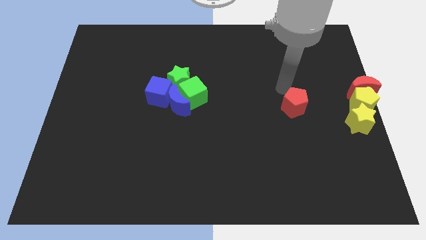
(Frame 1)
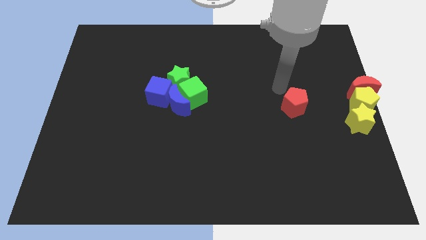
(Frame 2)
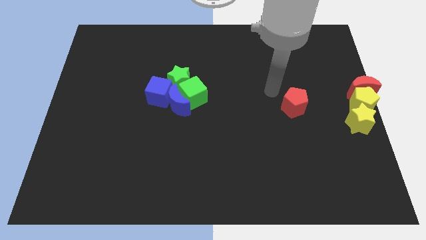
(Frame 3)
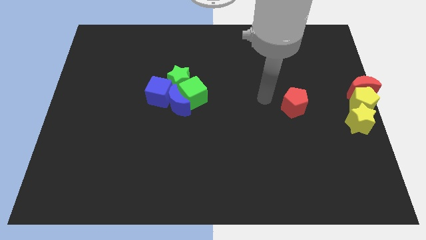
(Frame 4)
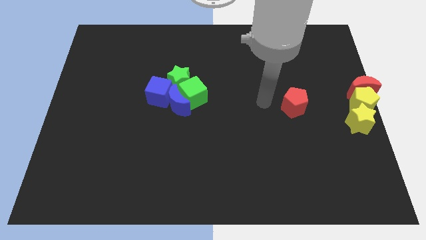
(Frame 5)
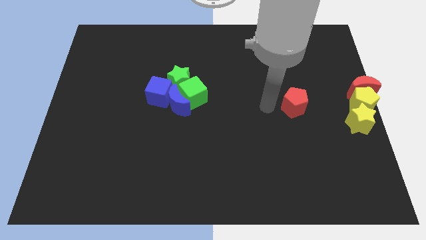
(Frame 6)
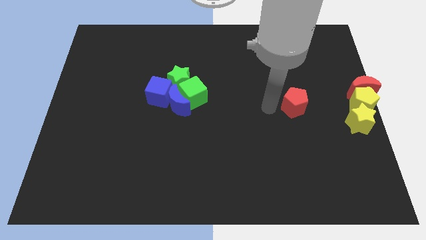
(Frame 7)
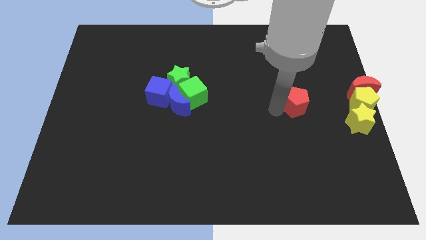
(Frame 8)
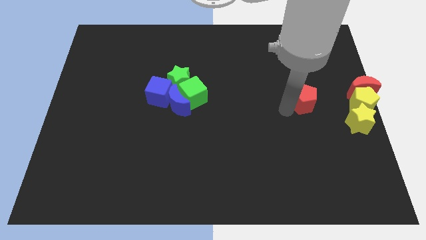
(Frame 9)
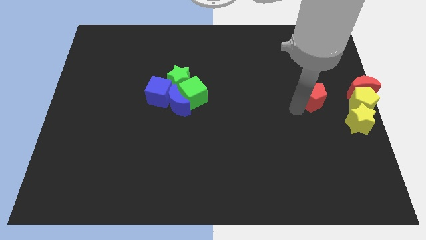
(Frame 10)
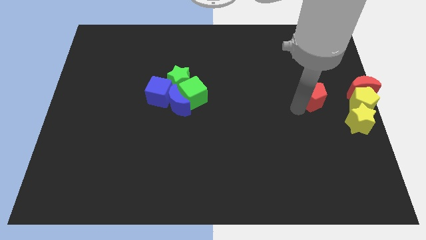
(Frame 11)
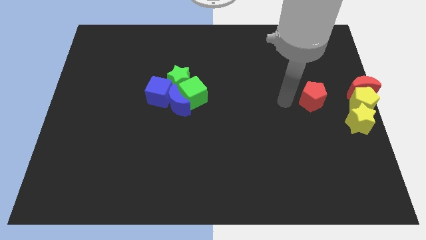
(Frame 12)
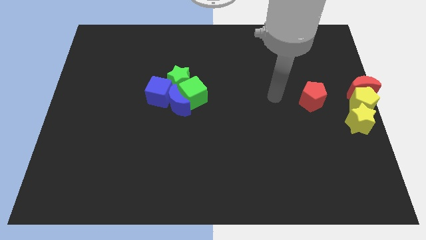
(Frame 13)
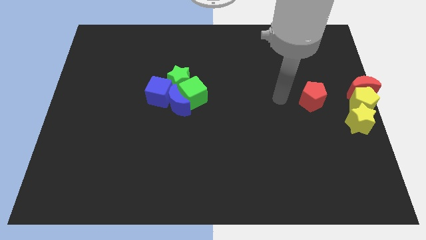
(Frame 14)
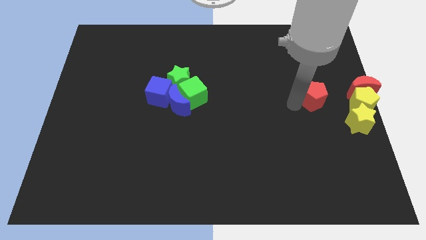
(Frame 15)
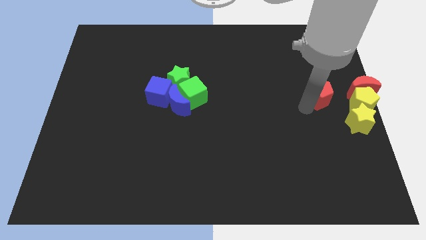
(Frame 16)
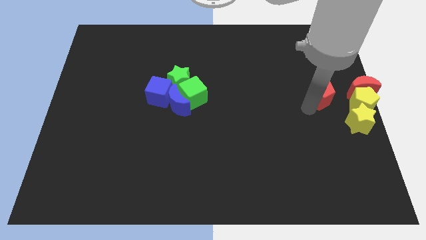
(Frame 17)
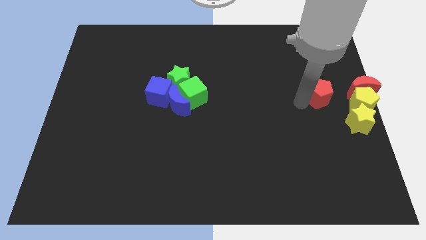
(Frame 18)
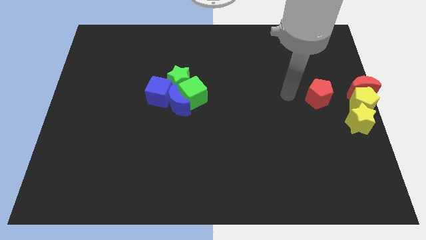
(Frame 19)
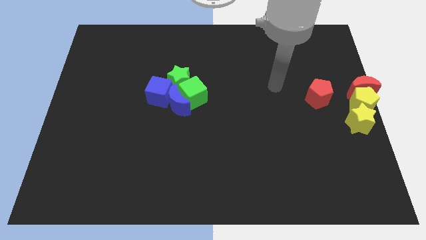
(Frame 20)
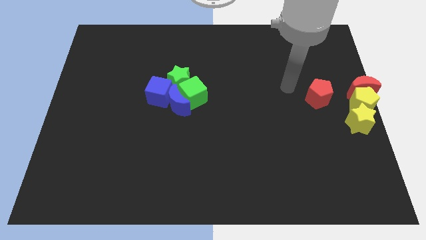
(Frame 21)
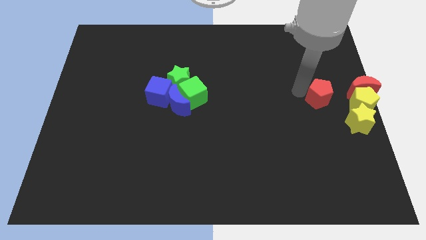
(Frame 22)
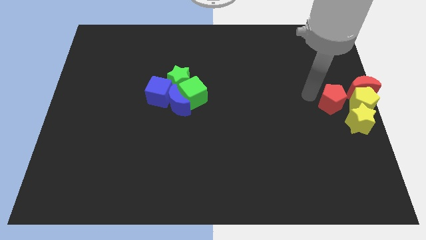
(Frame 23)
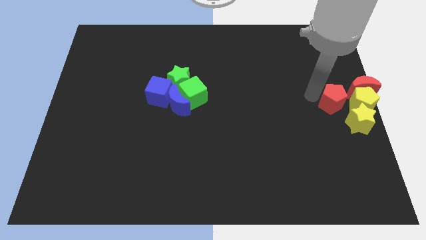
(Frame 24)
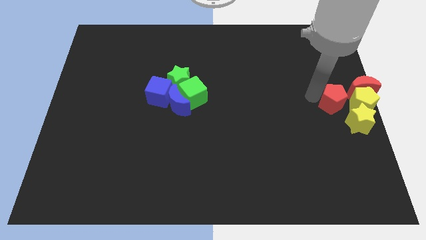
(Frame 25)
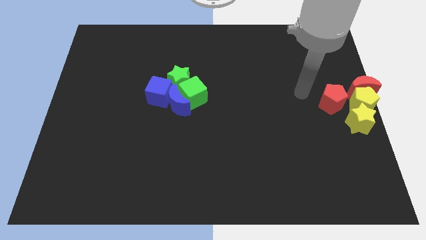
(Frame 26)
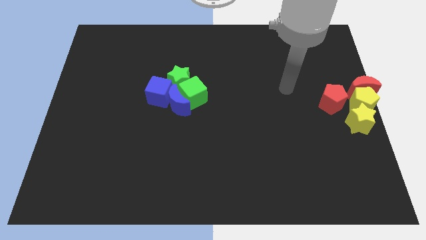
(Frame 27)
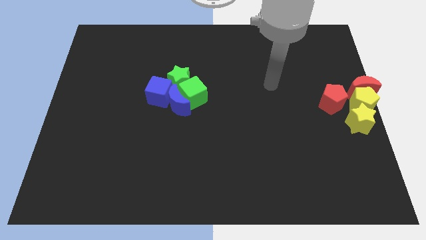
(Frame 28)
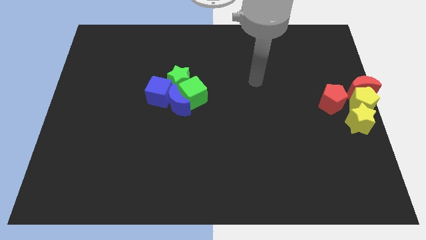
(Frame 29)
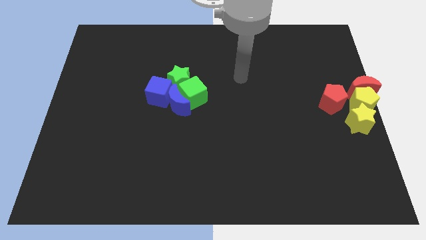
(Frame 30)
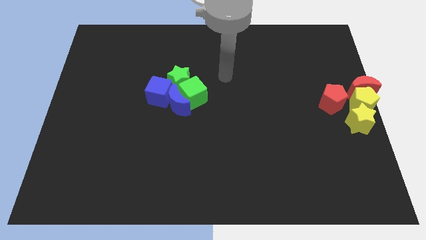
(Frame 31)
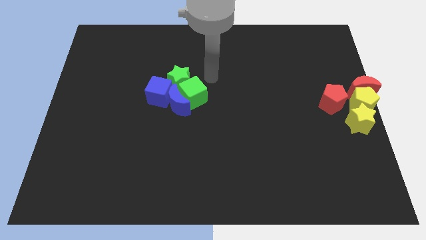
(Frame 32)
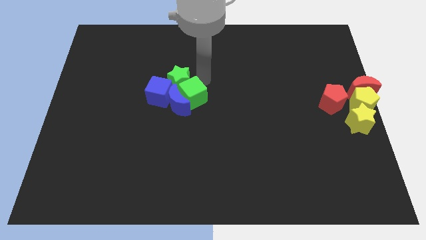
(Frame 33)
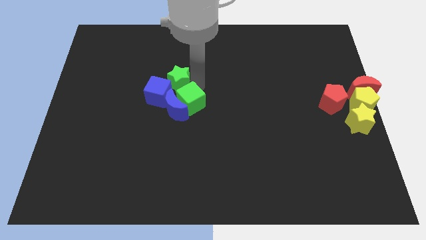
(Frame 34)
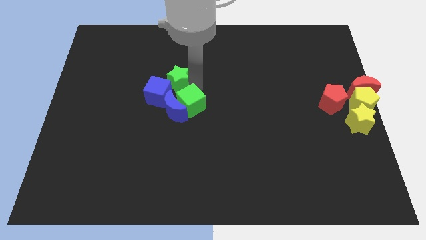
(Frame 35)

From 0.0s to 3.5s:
push the red pentagon close to the yellow pentagon

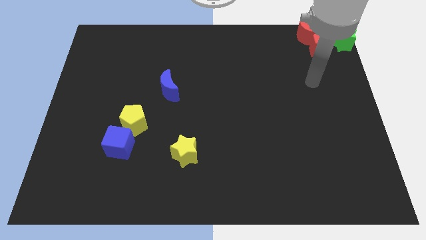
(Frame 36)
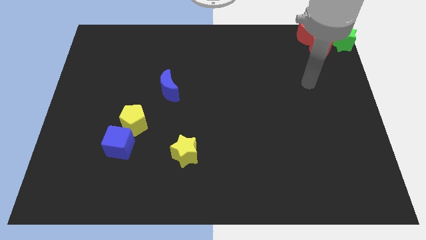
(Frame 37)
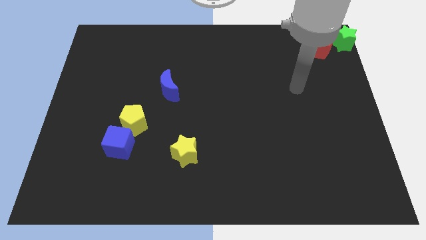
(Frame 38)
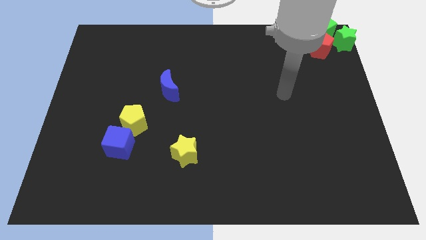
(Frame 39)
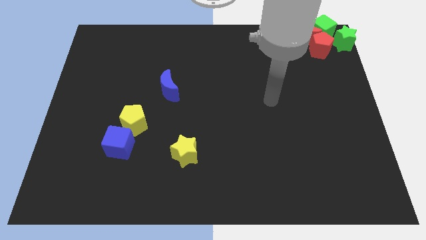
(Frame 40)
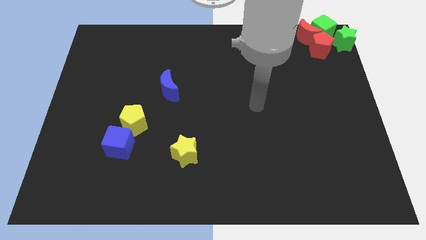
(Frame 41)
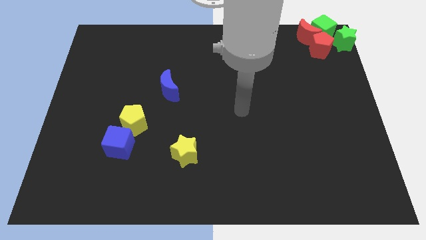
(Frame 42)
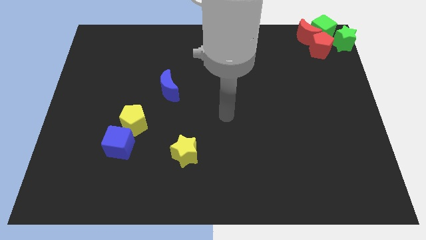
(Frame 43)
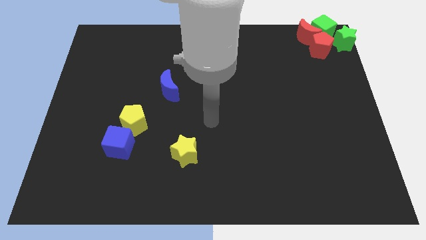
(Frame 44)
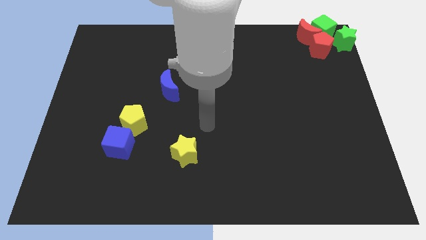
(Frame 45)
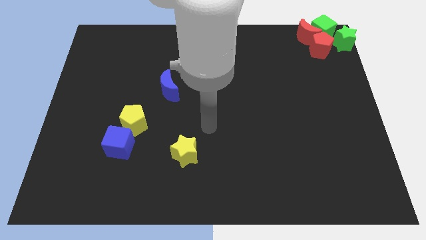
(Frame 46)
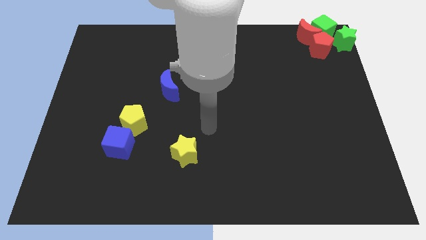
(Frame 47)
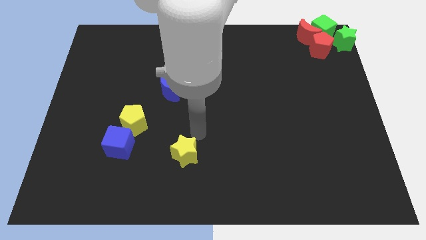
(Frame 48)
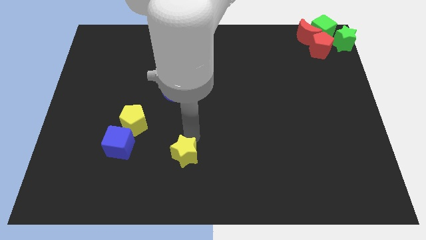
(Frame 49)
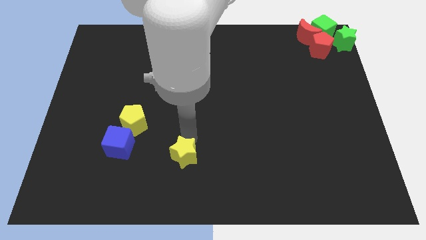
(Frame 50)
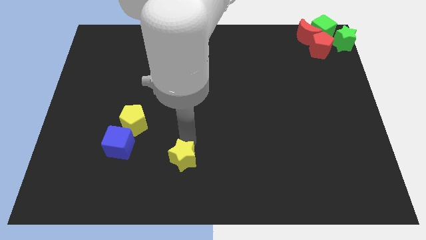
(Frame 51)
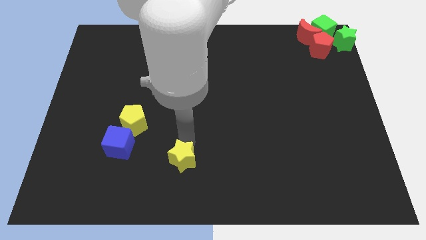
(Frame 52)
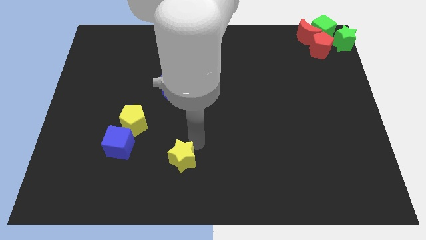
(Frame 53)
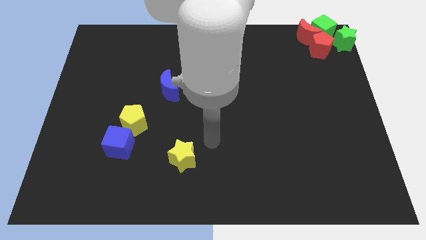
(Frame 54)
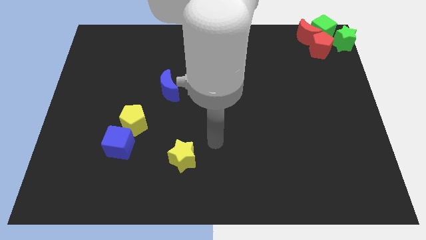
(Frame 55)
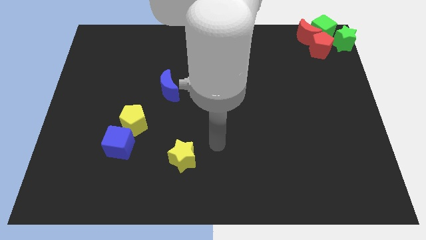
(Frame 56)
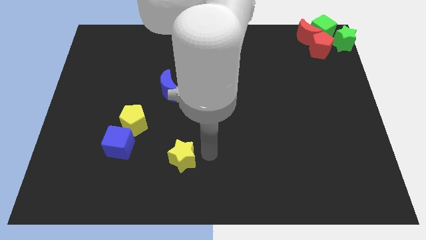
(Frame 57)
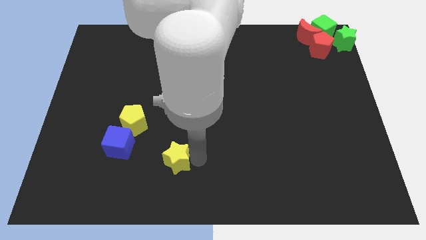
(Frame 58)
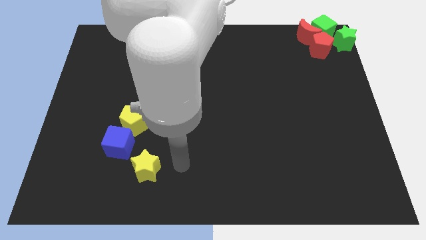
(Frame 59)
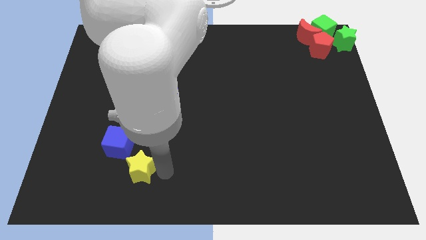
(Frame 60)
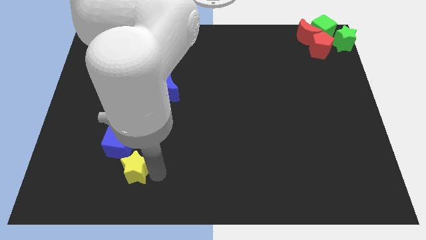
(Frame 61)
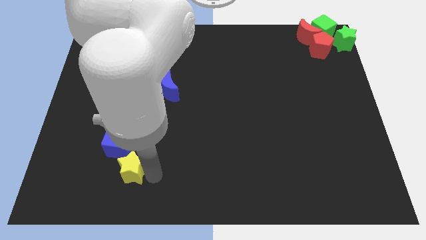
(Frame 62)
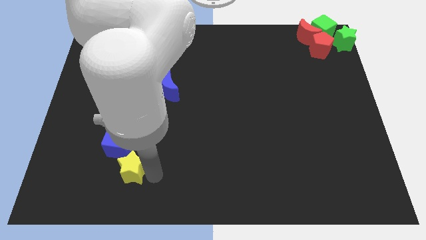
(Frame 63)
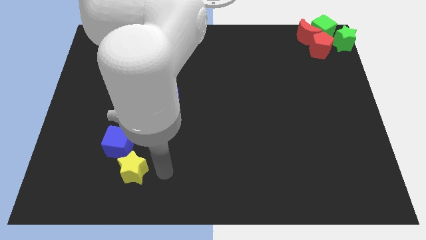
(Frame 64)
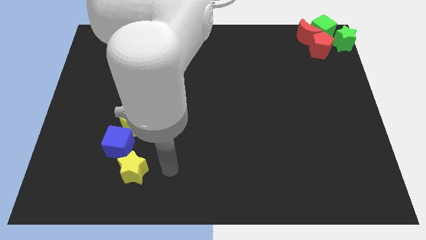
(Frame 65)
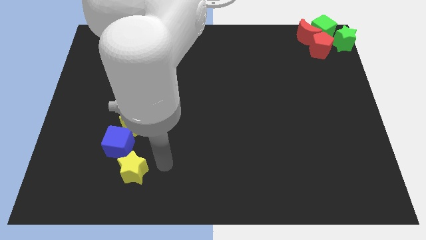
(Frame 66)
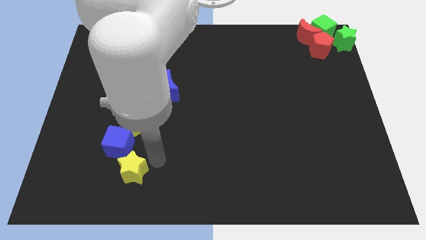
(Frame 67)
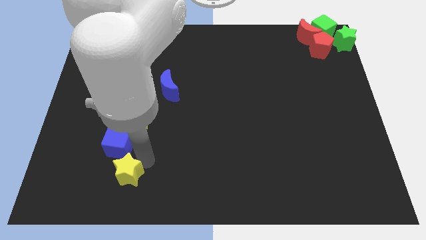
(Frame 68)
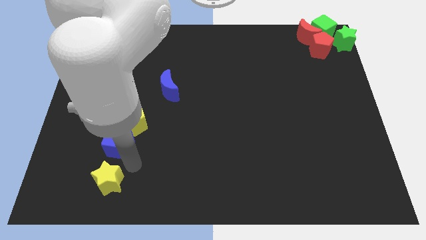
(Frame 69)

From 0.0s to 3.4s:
move the yellow star to the bottom of the blue cube

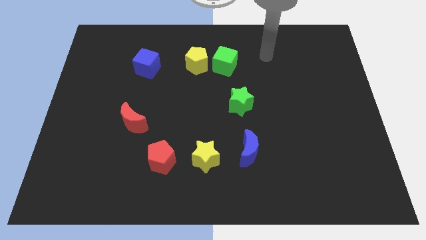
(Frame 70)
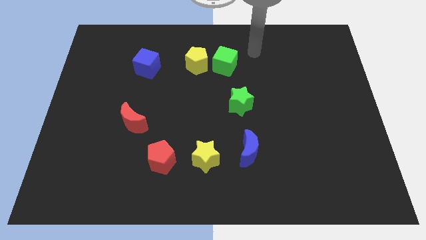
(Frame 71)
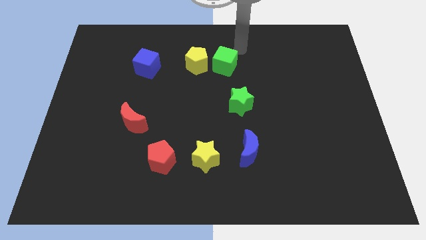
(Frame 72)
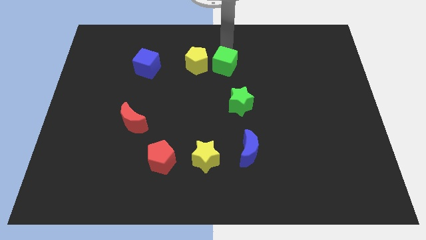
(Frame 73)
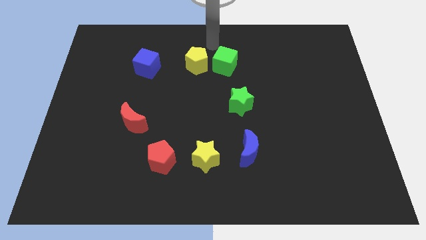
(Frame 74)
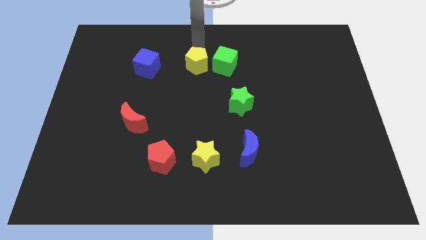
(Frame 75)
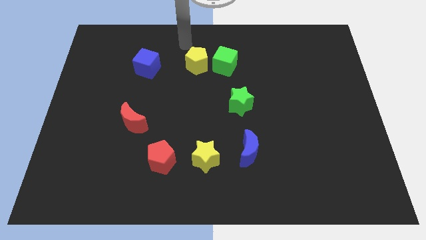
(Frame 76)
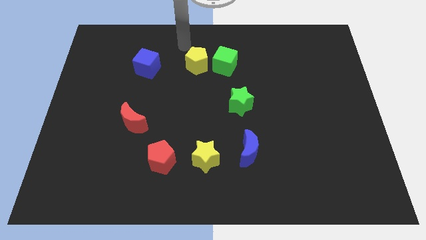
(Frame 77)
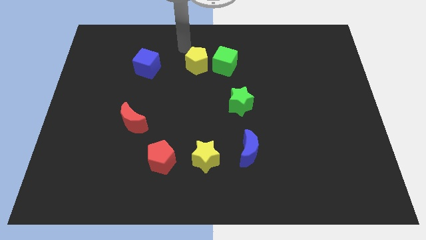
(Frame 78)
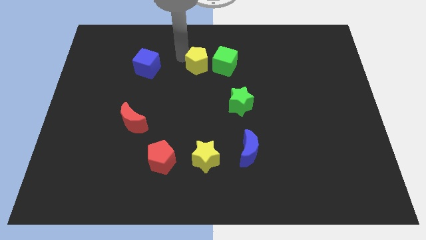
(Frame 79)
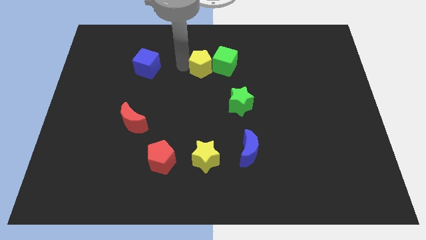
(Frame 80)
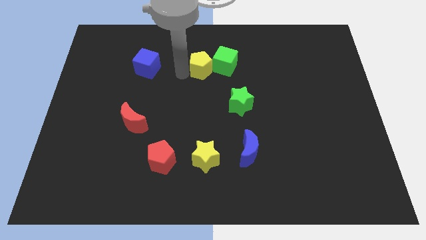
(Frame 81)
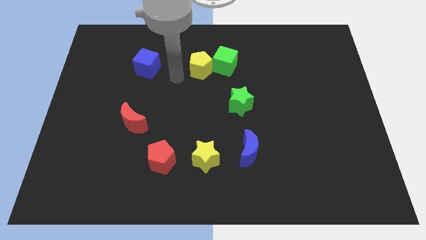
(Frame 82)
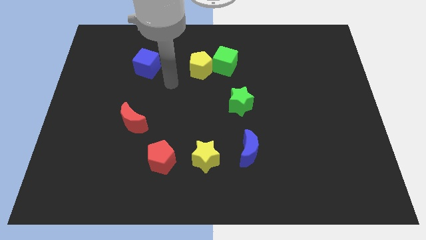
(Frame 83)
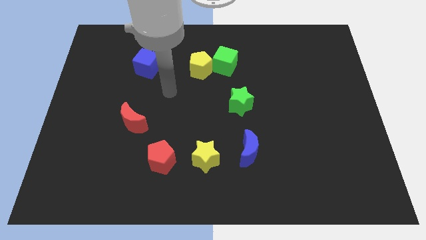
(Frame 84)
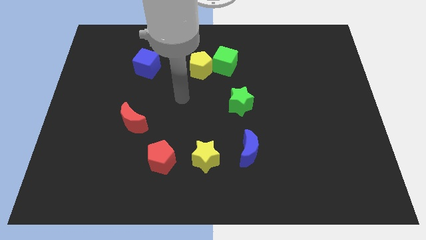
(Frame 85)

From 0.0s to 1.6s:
make green cube and yellow pentagon touch each other

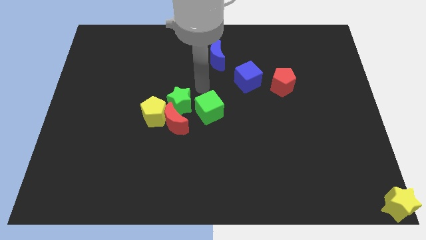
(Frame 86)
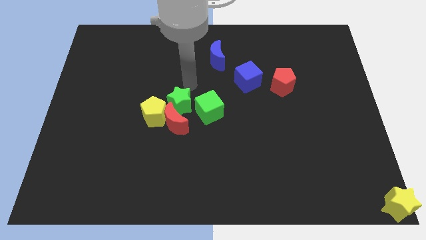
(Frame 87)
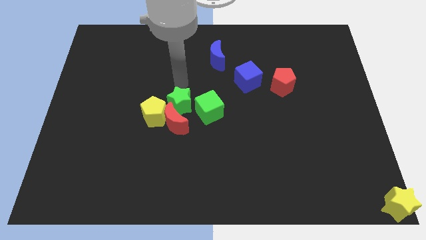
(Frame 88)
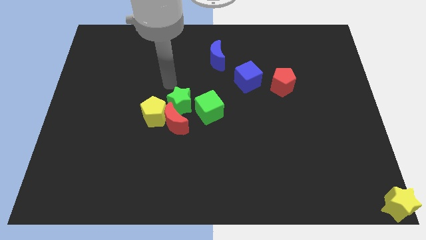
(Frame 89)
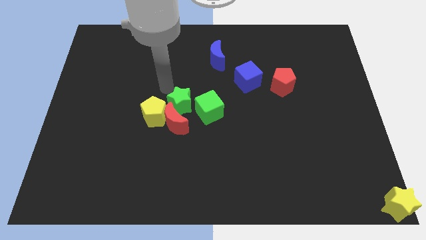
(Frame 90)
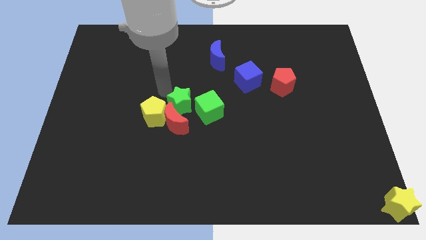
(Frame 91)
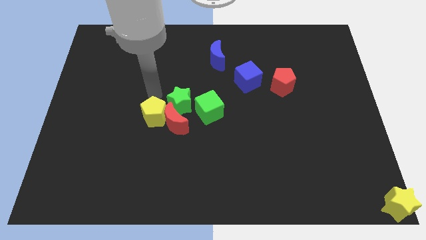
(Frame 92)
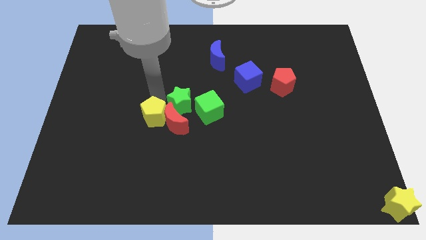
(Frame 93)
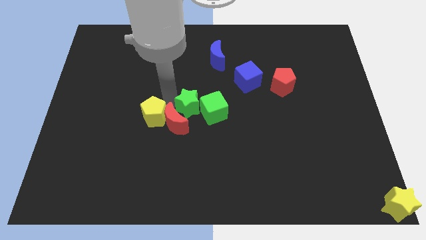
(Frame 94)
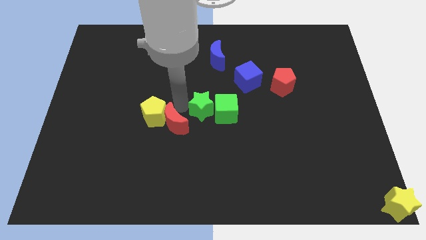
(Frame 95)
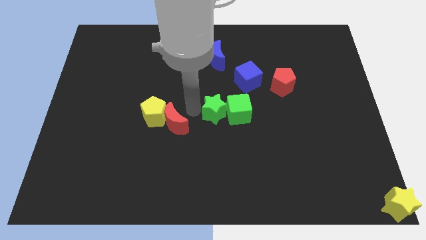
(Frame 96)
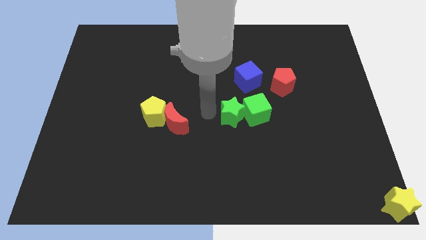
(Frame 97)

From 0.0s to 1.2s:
push the green star into the green cube
